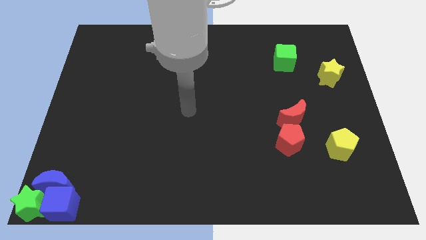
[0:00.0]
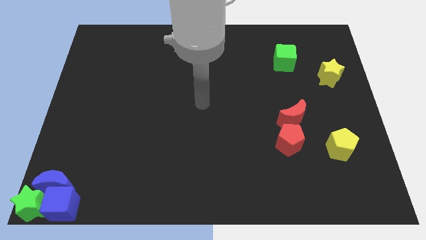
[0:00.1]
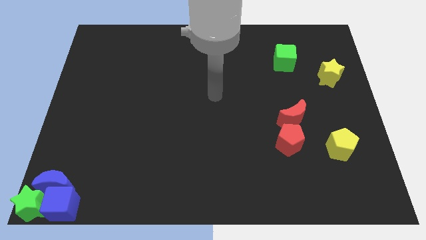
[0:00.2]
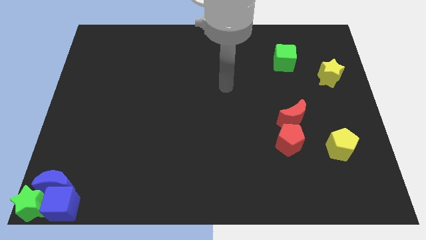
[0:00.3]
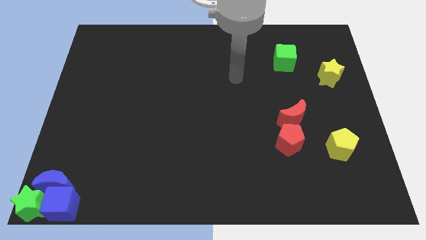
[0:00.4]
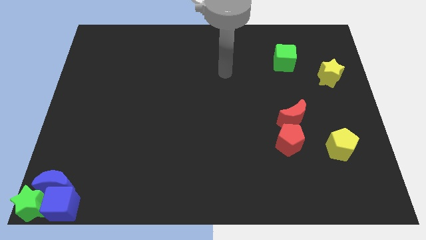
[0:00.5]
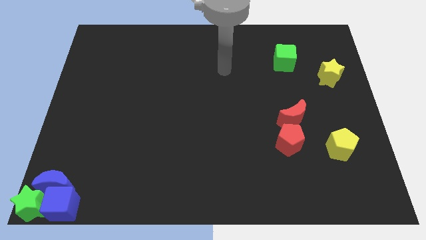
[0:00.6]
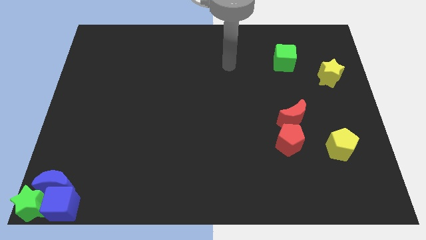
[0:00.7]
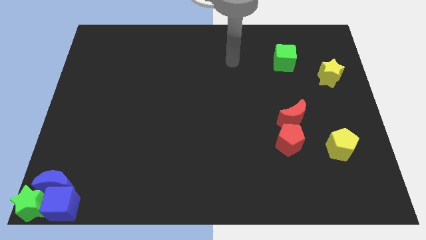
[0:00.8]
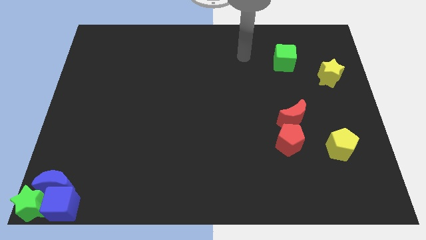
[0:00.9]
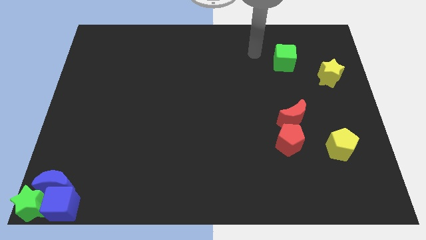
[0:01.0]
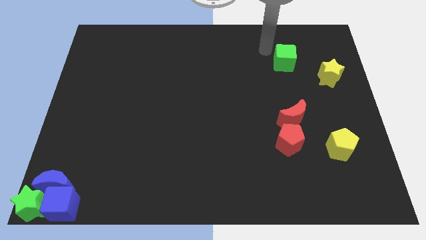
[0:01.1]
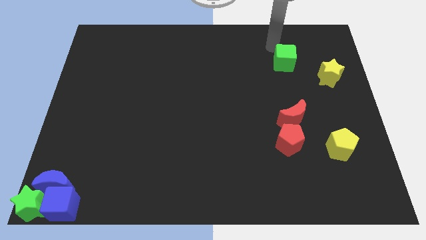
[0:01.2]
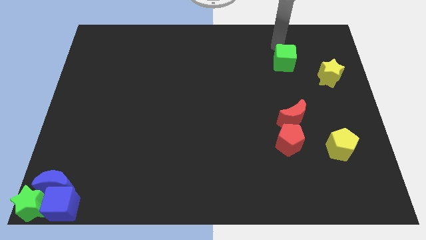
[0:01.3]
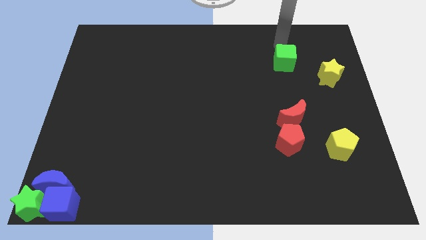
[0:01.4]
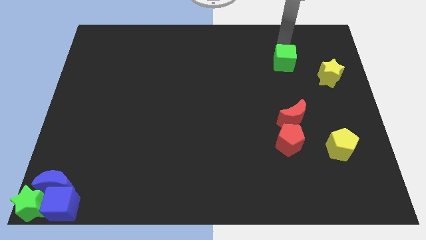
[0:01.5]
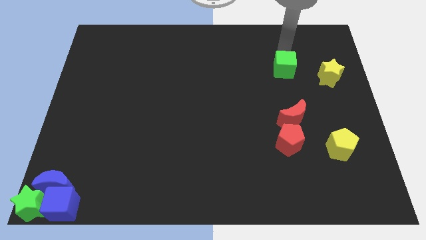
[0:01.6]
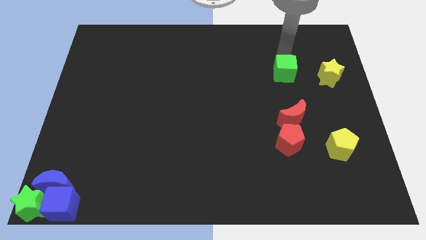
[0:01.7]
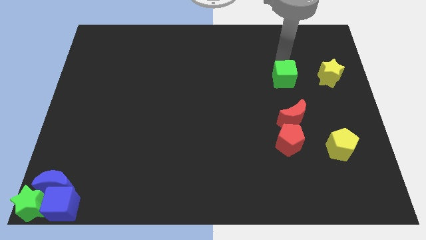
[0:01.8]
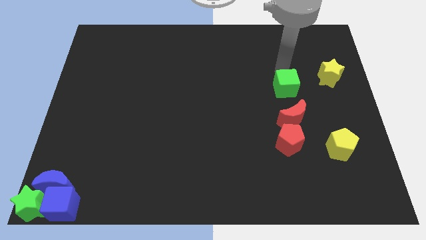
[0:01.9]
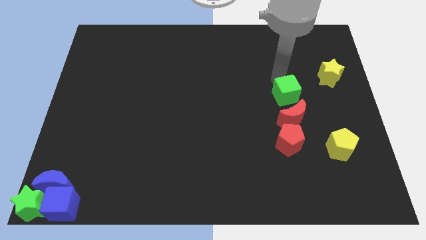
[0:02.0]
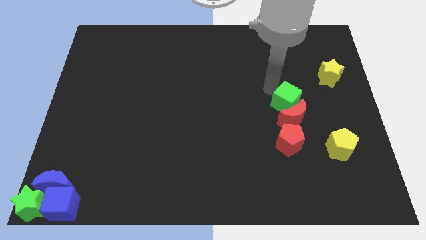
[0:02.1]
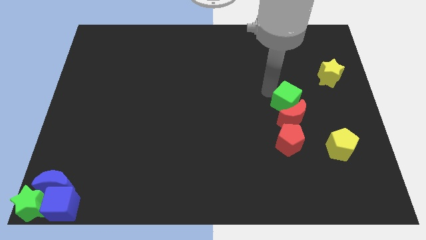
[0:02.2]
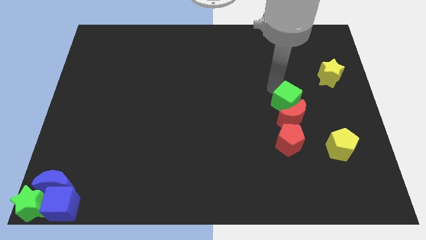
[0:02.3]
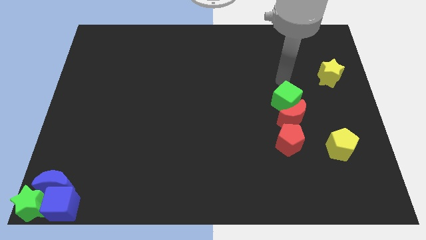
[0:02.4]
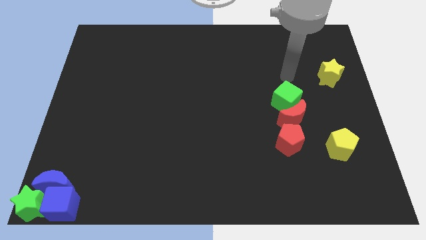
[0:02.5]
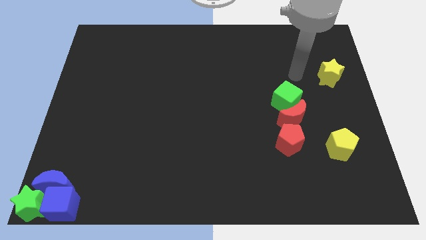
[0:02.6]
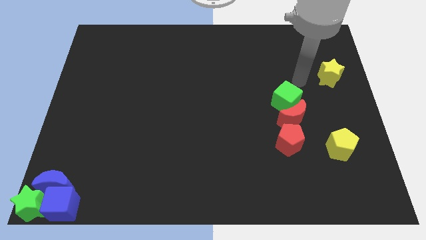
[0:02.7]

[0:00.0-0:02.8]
push the green cube to the top of the red moon

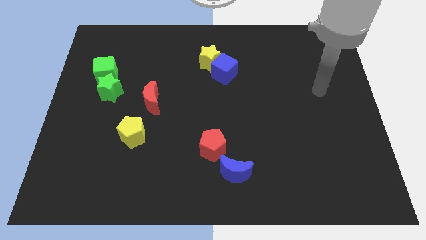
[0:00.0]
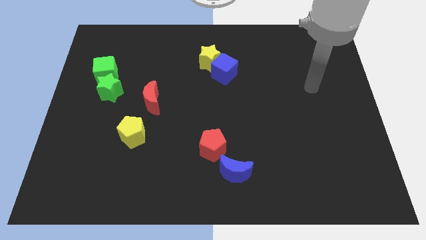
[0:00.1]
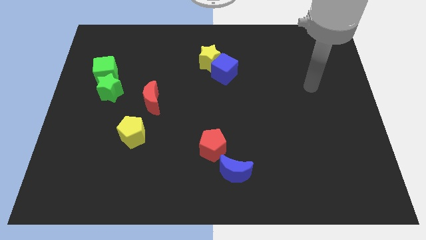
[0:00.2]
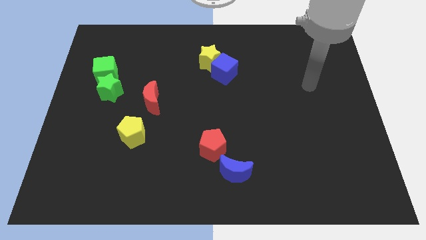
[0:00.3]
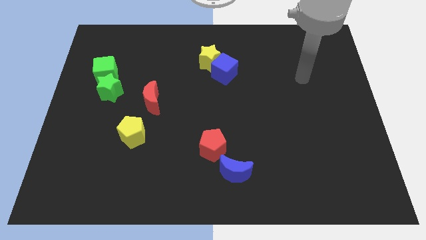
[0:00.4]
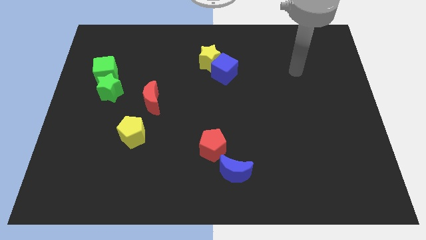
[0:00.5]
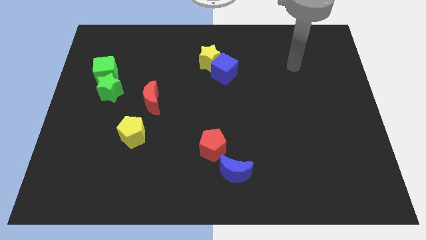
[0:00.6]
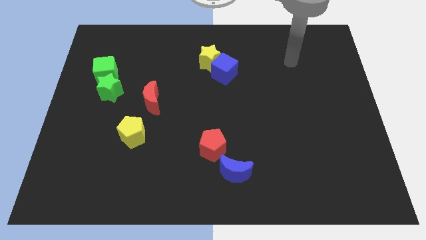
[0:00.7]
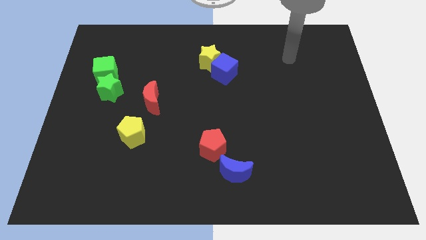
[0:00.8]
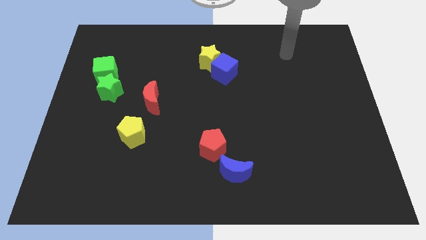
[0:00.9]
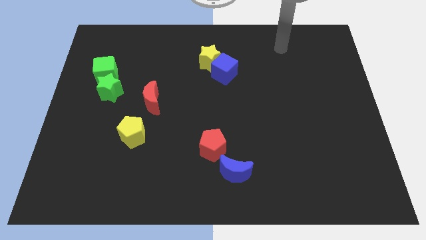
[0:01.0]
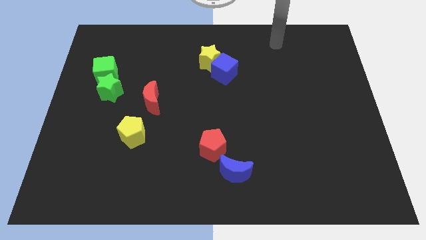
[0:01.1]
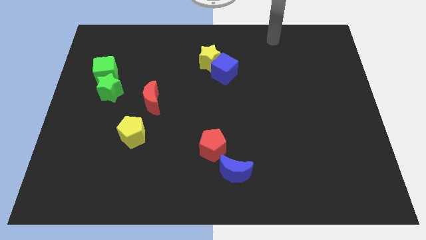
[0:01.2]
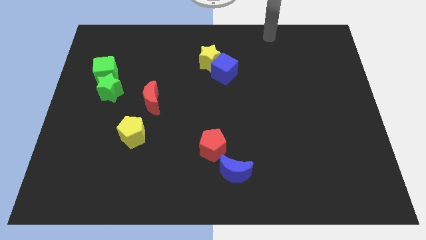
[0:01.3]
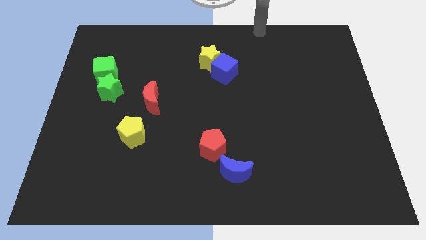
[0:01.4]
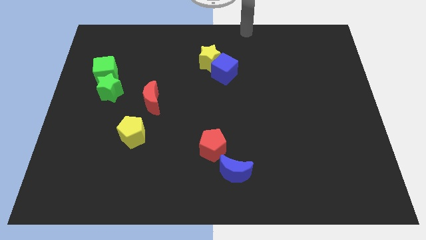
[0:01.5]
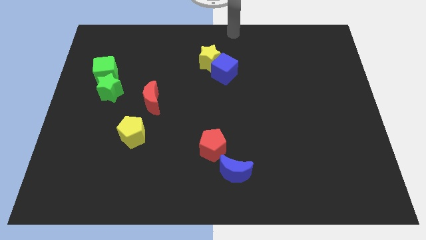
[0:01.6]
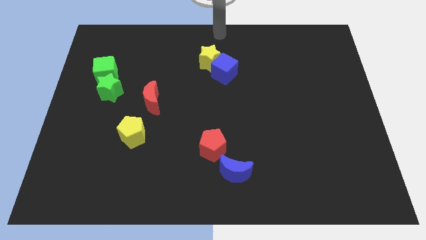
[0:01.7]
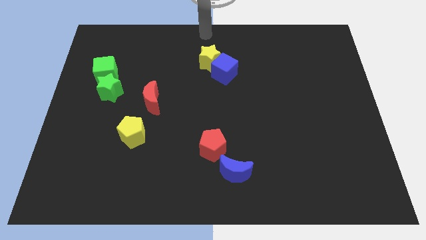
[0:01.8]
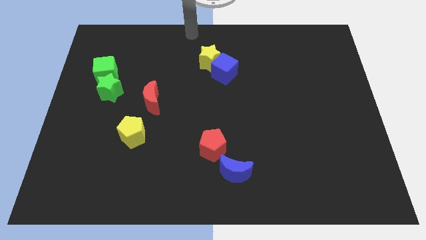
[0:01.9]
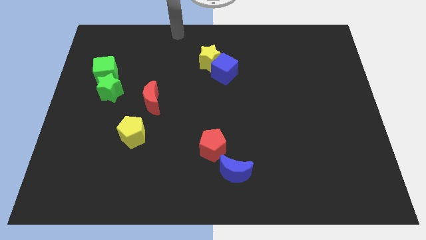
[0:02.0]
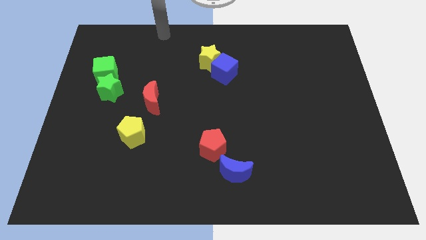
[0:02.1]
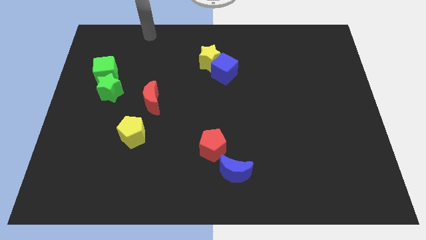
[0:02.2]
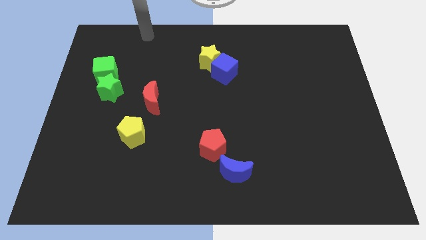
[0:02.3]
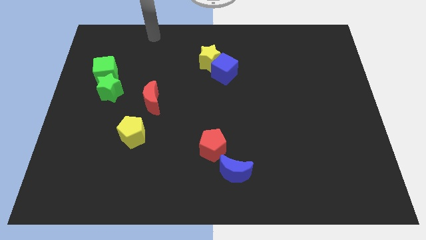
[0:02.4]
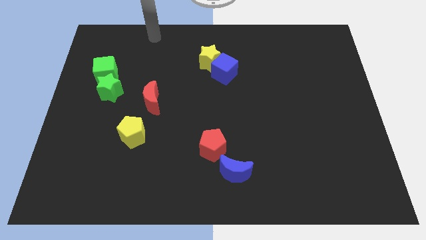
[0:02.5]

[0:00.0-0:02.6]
move the arm to the top left

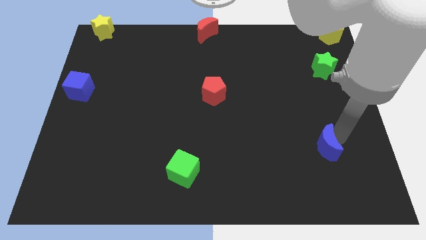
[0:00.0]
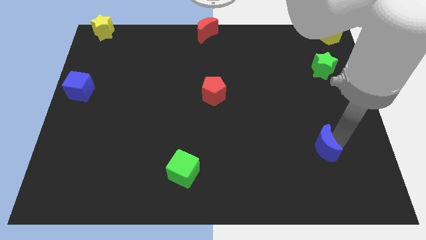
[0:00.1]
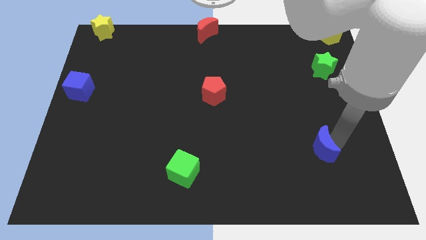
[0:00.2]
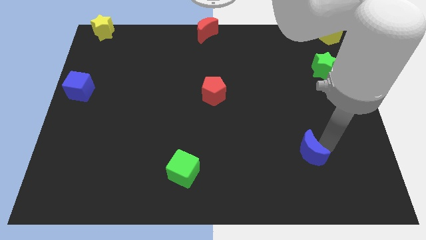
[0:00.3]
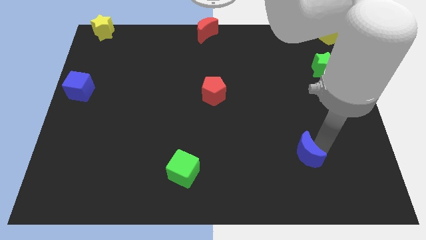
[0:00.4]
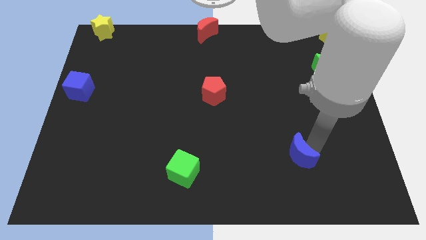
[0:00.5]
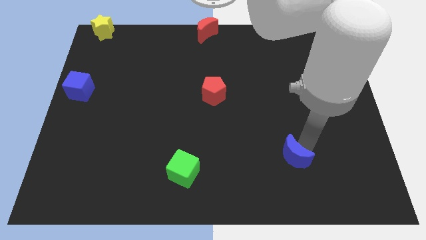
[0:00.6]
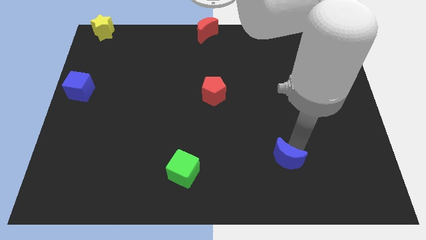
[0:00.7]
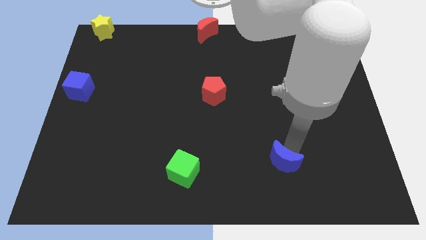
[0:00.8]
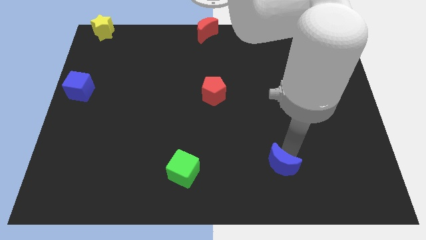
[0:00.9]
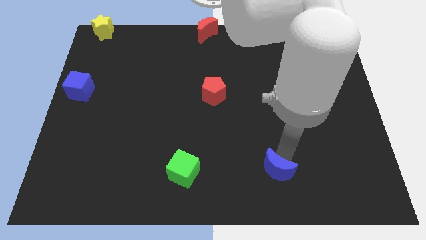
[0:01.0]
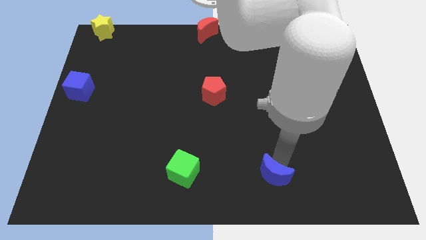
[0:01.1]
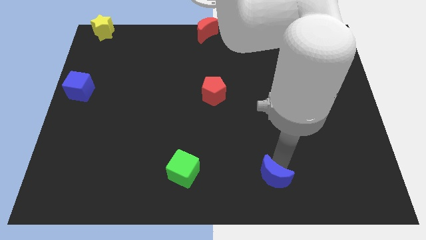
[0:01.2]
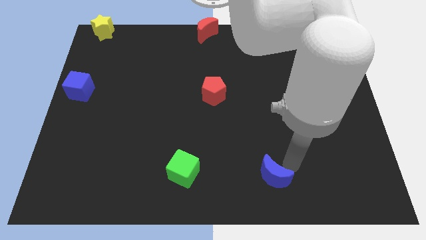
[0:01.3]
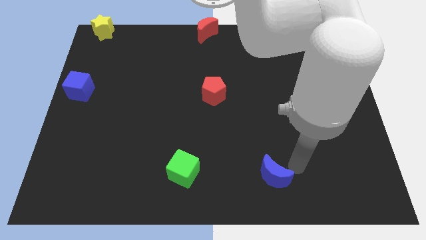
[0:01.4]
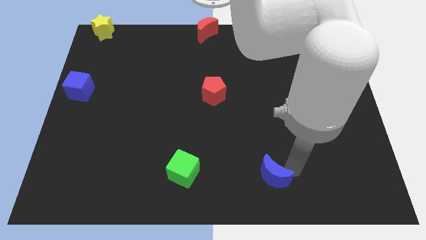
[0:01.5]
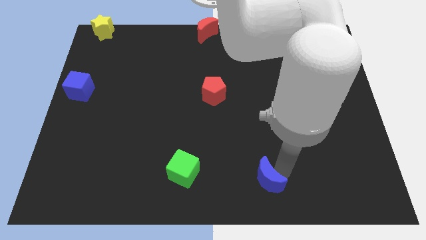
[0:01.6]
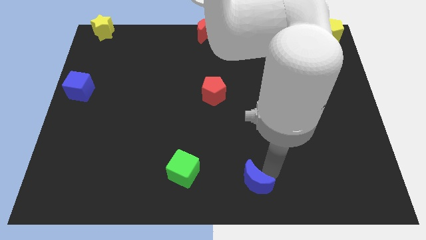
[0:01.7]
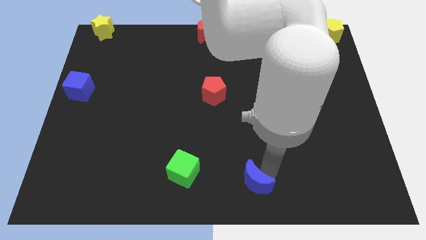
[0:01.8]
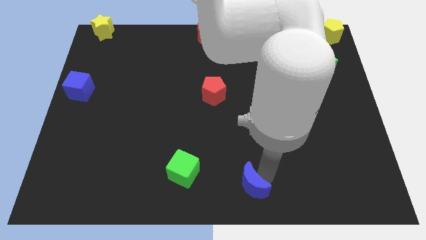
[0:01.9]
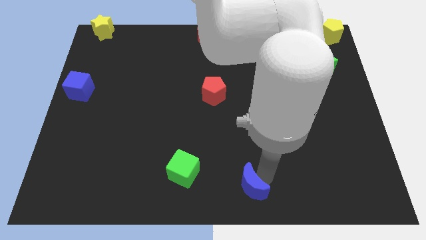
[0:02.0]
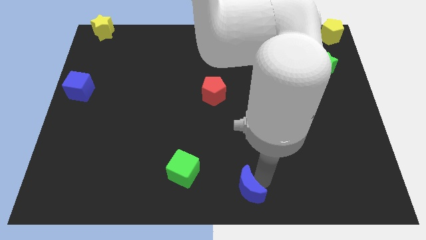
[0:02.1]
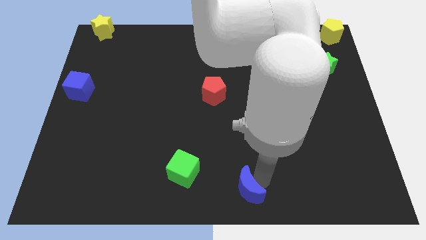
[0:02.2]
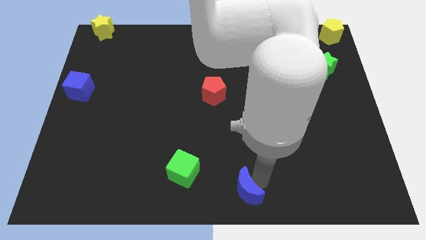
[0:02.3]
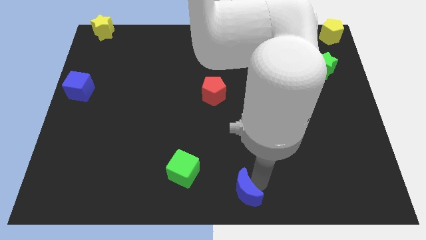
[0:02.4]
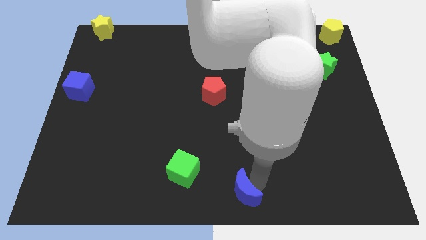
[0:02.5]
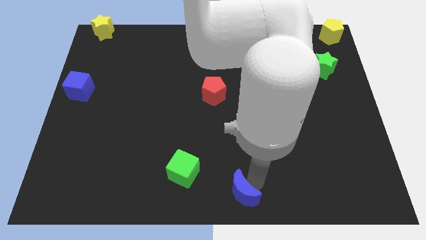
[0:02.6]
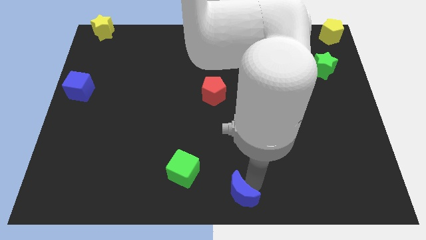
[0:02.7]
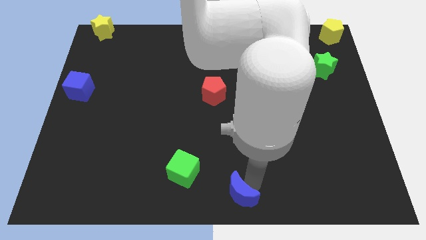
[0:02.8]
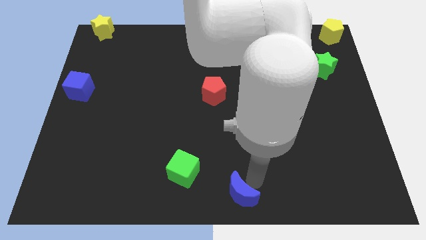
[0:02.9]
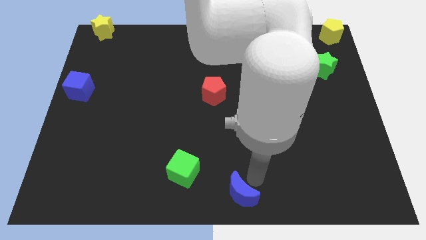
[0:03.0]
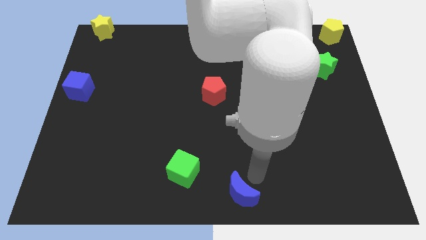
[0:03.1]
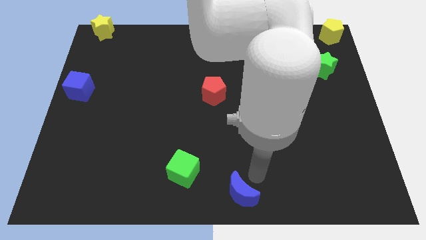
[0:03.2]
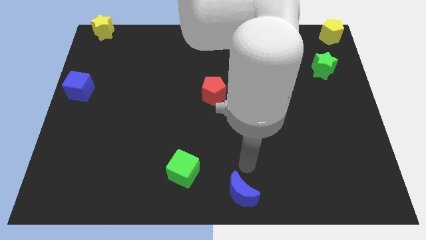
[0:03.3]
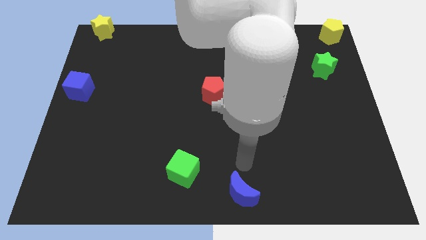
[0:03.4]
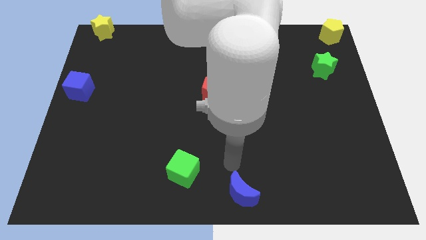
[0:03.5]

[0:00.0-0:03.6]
take the blue crescent to the bottom right side of the green cube
